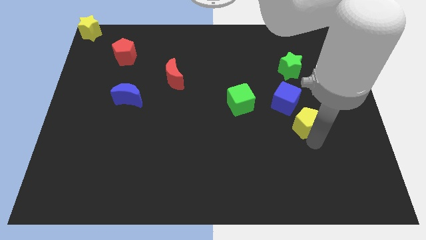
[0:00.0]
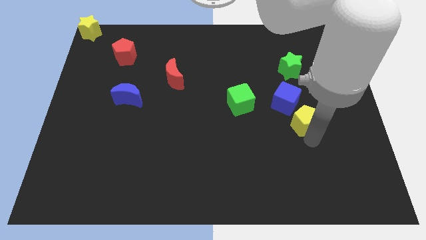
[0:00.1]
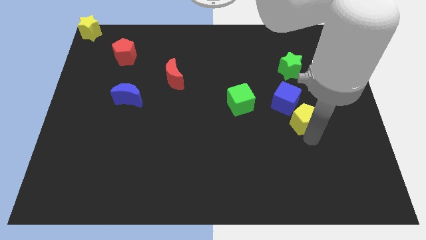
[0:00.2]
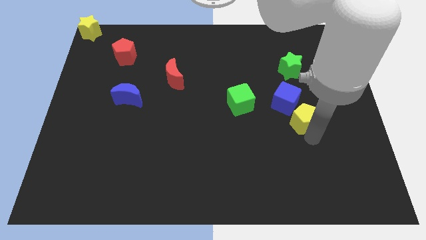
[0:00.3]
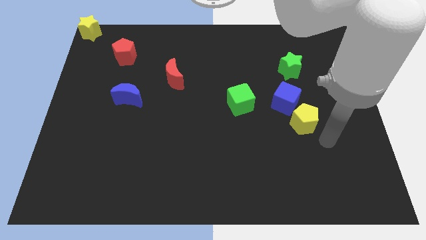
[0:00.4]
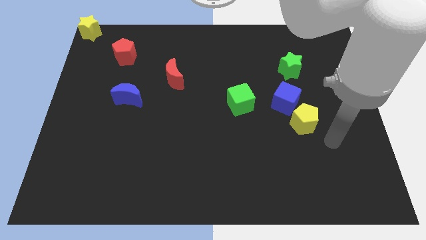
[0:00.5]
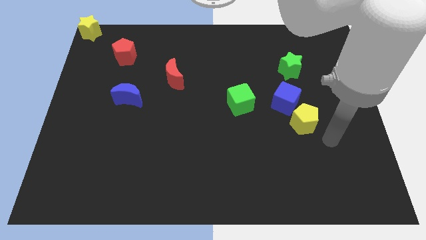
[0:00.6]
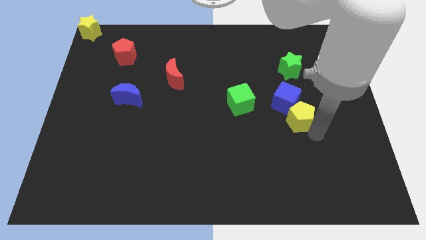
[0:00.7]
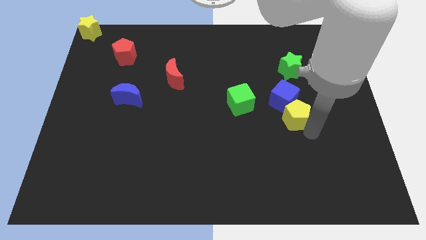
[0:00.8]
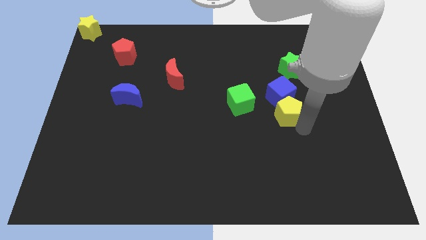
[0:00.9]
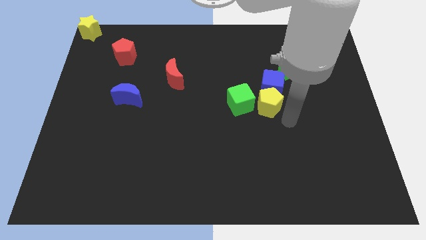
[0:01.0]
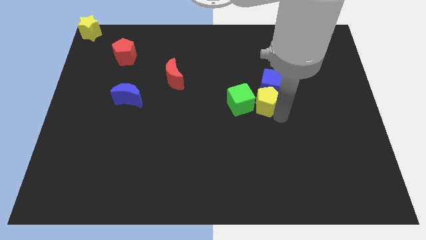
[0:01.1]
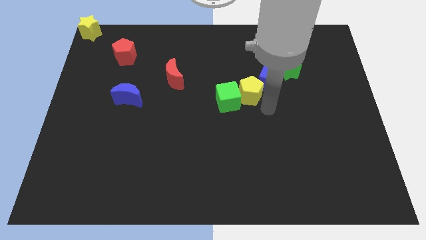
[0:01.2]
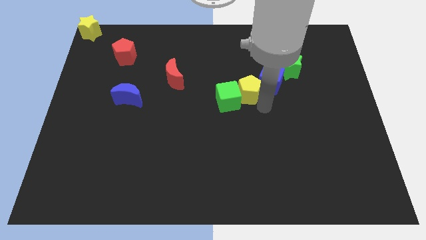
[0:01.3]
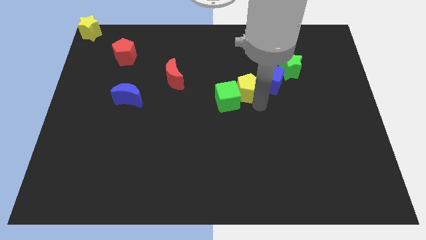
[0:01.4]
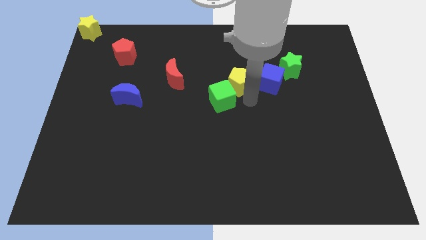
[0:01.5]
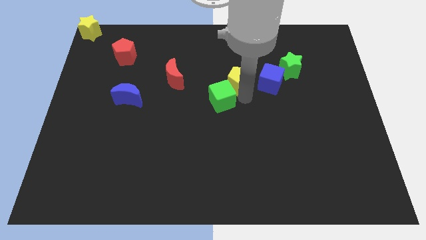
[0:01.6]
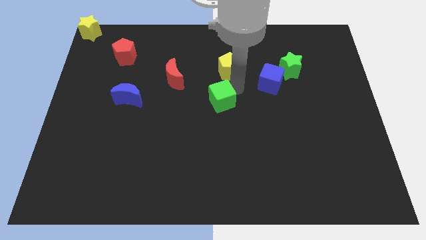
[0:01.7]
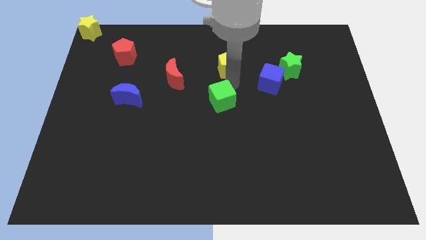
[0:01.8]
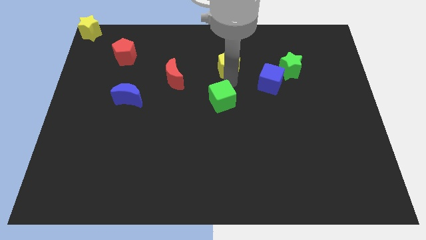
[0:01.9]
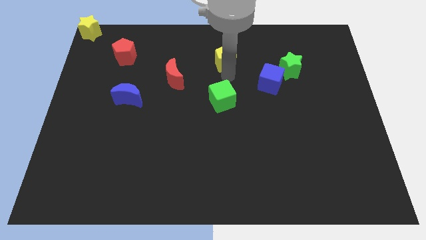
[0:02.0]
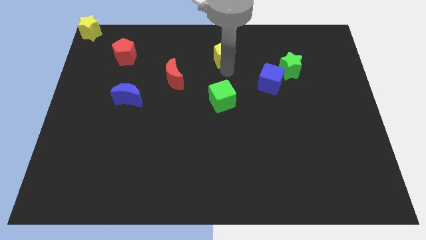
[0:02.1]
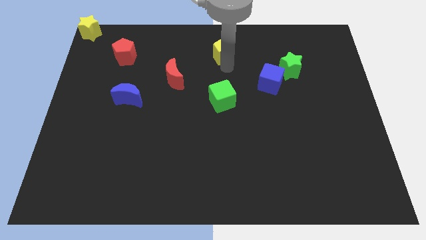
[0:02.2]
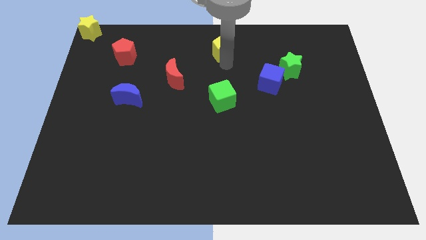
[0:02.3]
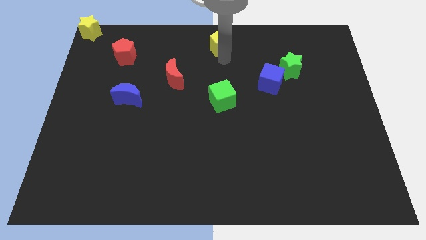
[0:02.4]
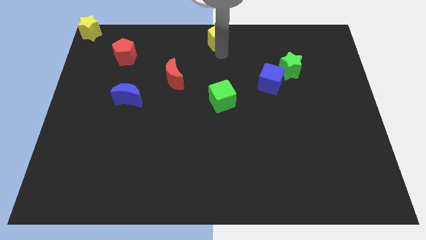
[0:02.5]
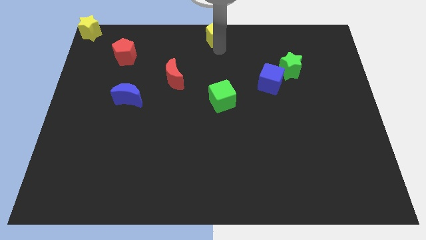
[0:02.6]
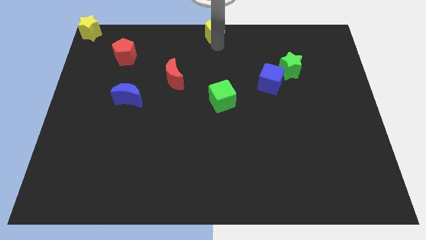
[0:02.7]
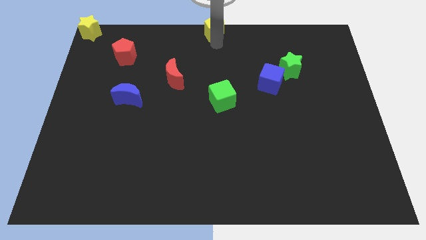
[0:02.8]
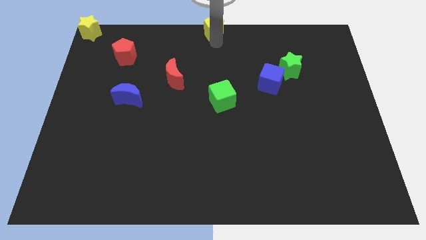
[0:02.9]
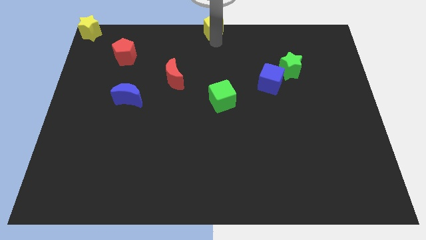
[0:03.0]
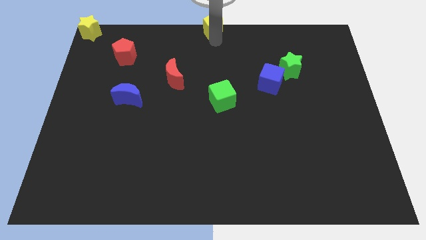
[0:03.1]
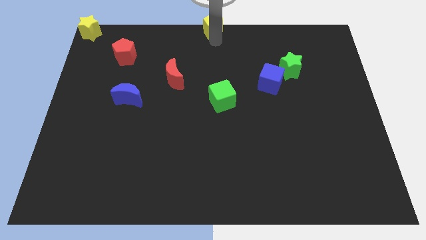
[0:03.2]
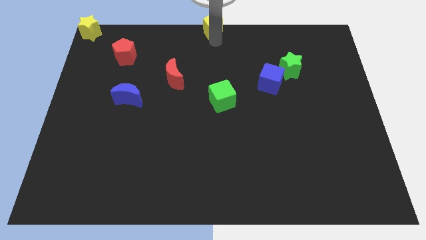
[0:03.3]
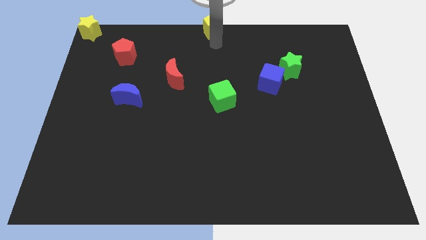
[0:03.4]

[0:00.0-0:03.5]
push yellow pentagon towards top middle of the board

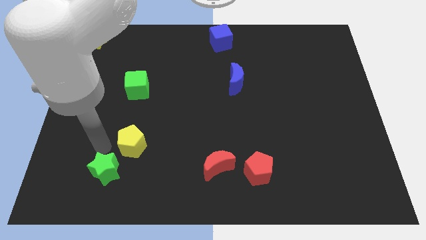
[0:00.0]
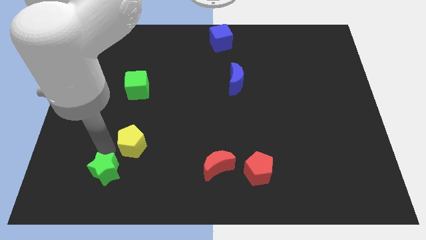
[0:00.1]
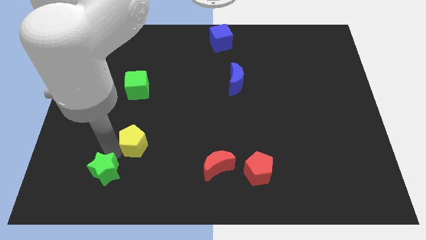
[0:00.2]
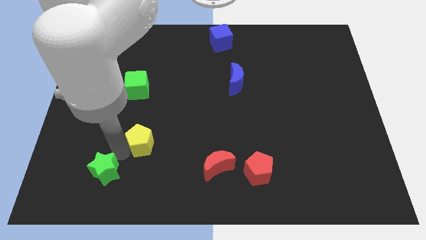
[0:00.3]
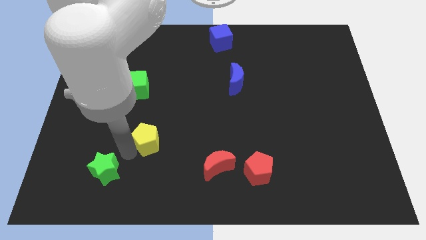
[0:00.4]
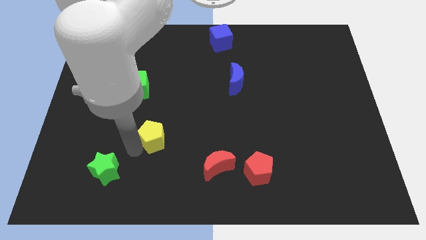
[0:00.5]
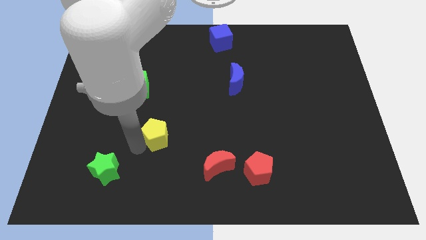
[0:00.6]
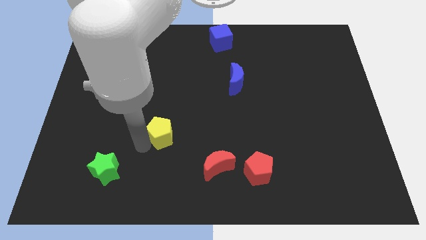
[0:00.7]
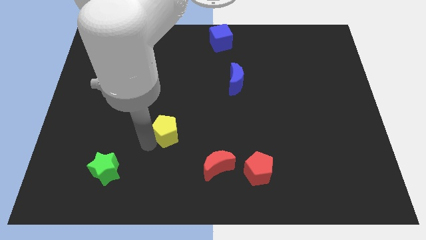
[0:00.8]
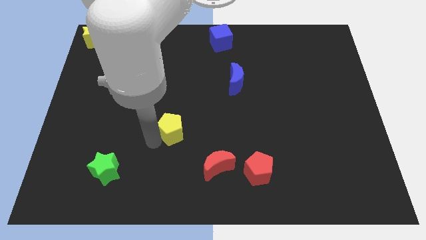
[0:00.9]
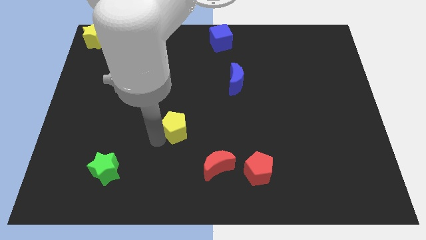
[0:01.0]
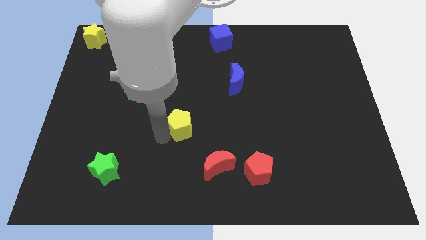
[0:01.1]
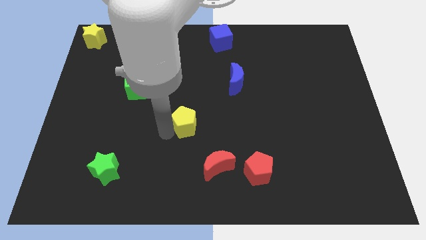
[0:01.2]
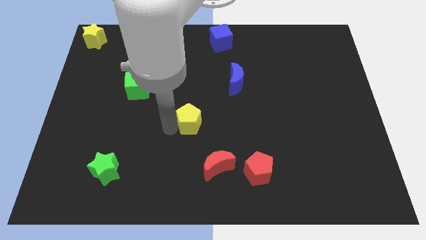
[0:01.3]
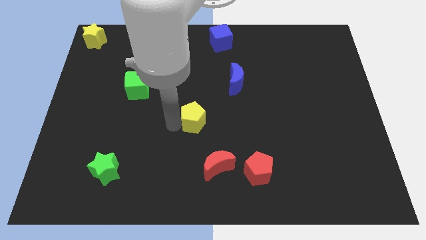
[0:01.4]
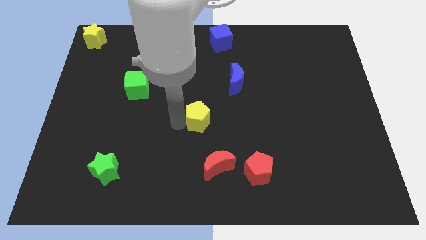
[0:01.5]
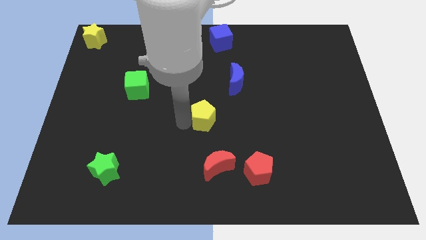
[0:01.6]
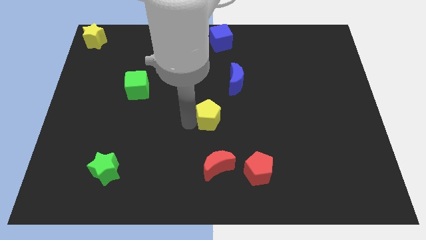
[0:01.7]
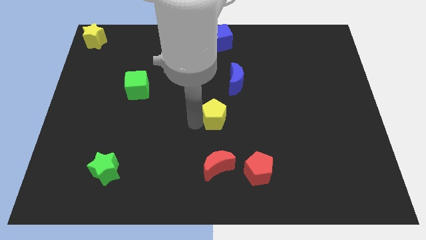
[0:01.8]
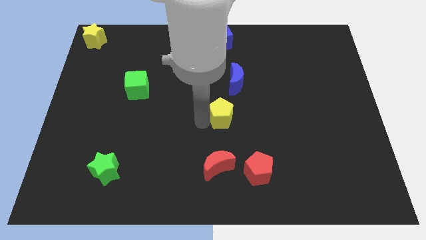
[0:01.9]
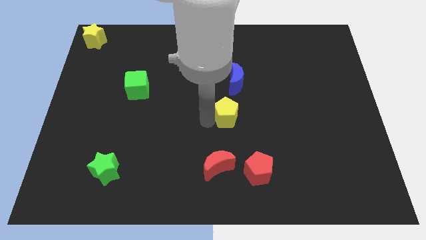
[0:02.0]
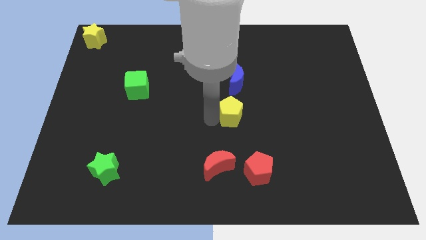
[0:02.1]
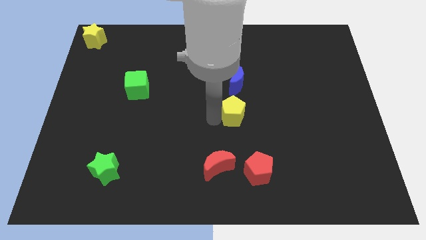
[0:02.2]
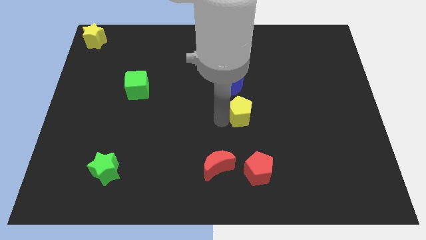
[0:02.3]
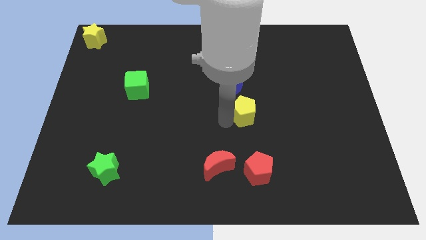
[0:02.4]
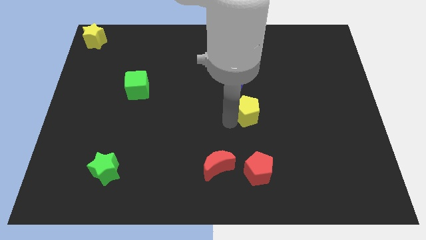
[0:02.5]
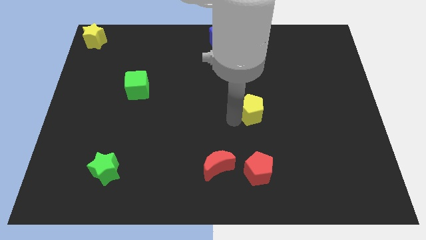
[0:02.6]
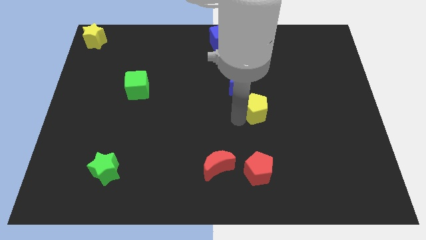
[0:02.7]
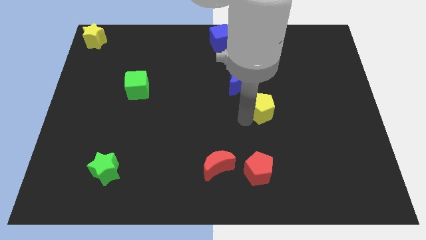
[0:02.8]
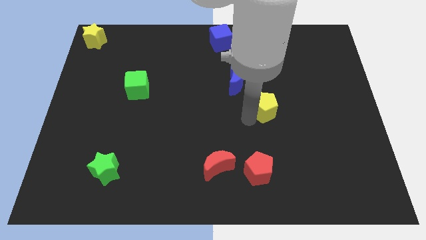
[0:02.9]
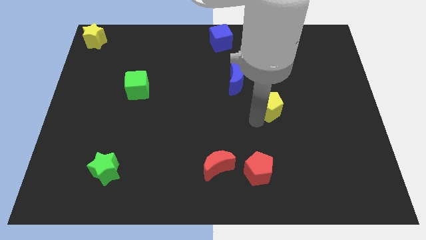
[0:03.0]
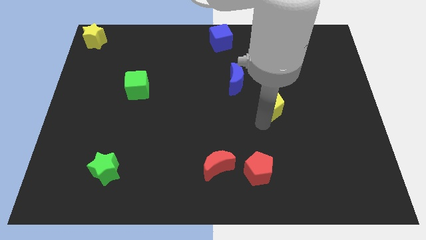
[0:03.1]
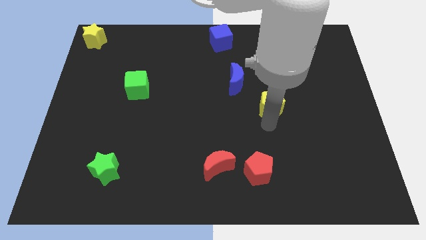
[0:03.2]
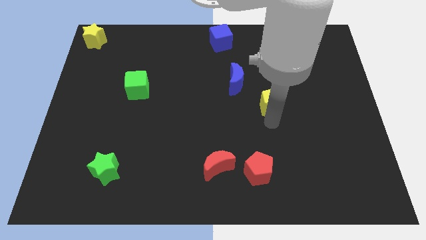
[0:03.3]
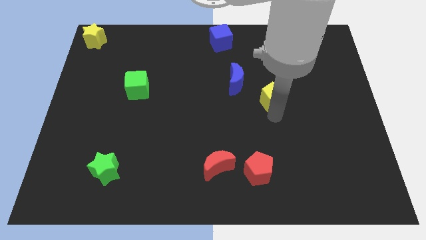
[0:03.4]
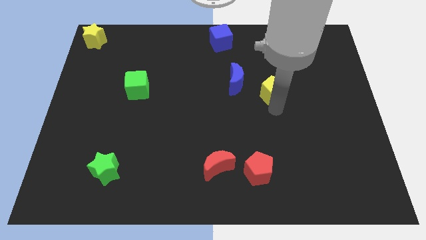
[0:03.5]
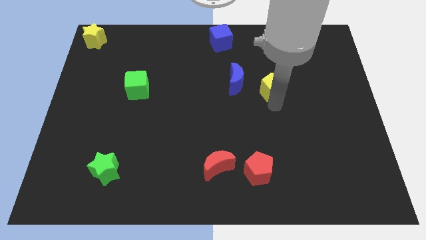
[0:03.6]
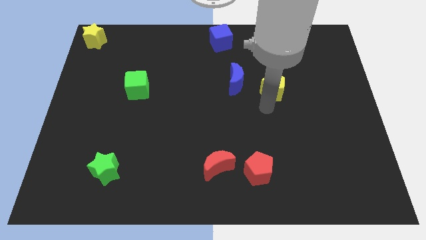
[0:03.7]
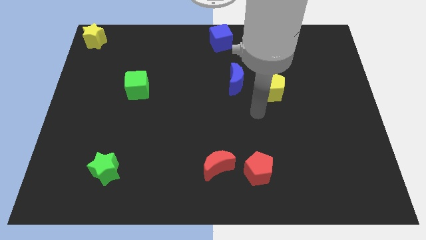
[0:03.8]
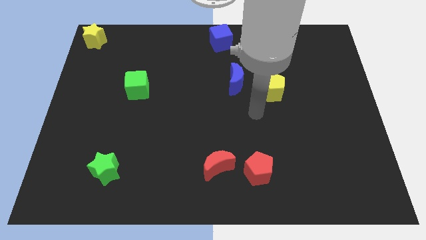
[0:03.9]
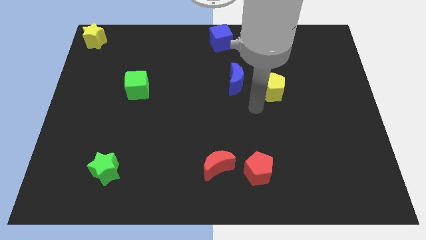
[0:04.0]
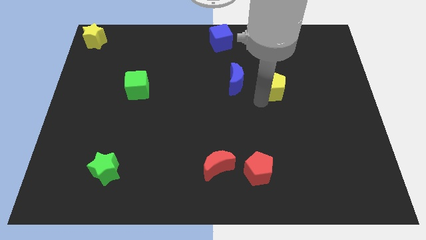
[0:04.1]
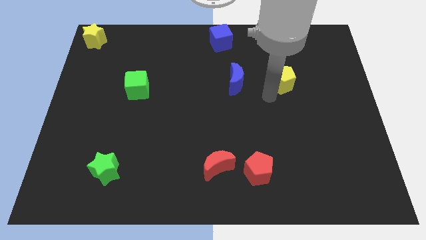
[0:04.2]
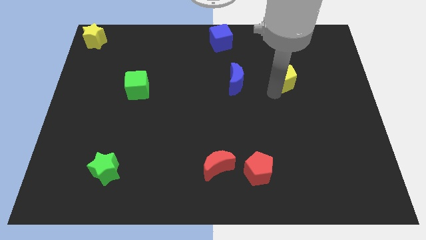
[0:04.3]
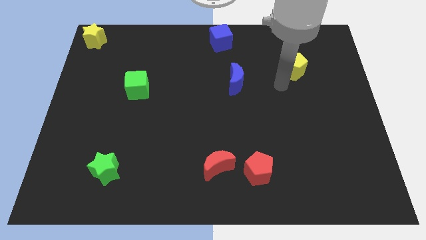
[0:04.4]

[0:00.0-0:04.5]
place yellow pentagon to the right of blue moon

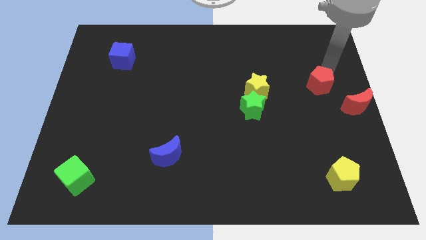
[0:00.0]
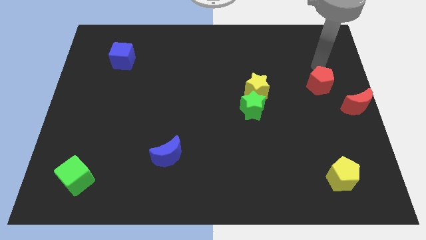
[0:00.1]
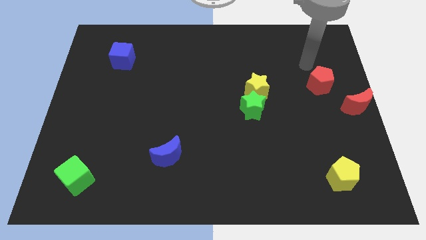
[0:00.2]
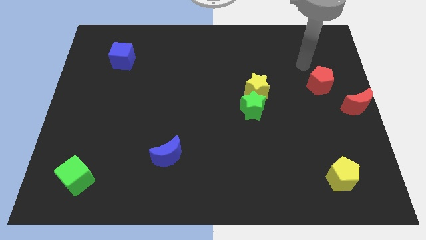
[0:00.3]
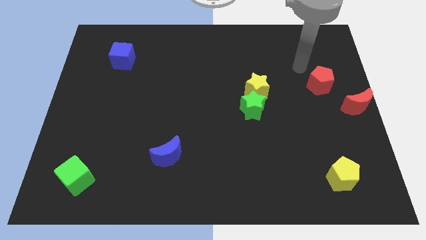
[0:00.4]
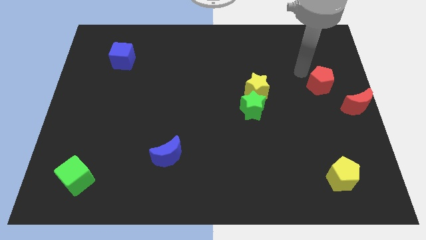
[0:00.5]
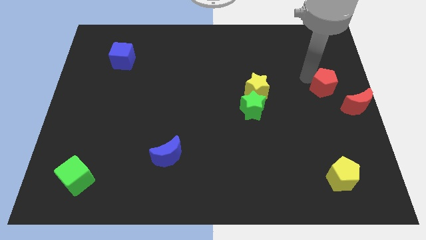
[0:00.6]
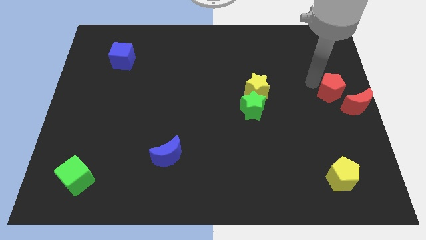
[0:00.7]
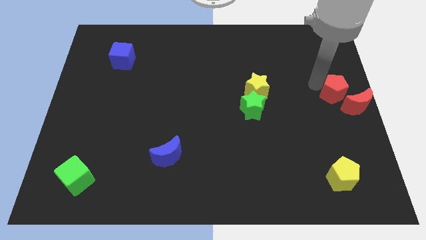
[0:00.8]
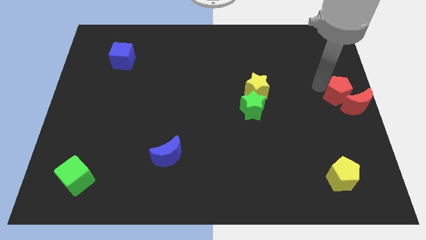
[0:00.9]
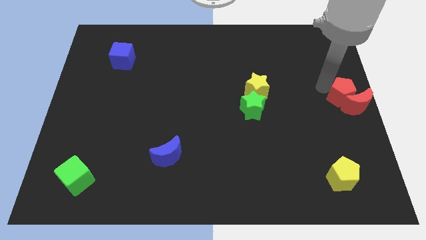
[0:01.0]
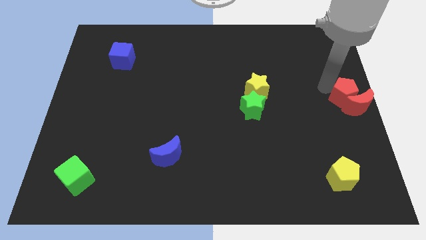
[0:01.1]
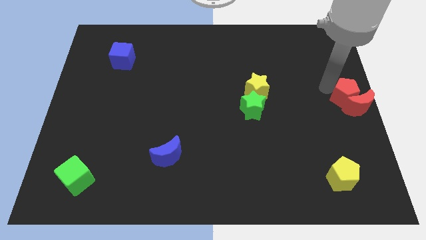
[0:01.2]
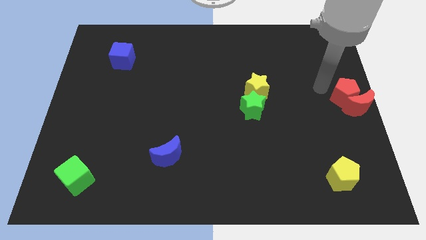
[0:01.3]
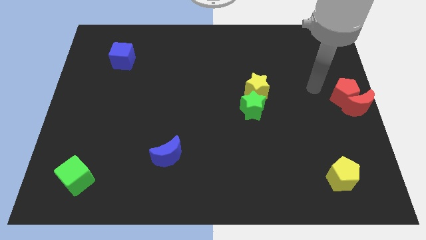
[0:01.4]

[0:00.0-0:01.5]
push the red pentagon into the red moon
